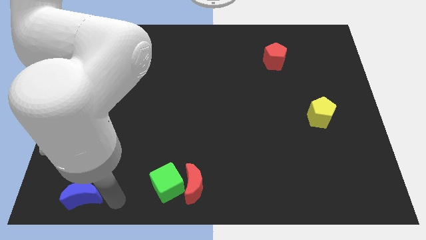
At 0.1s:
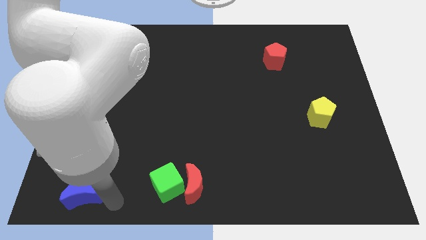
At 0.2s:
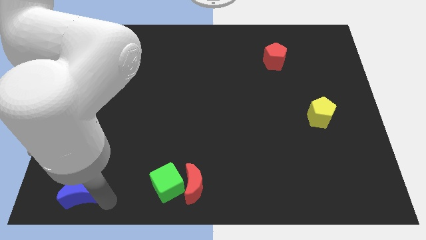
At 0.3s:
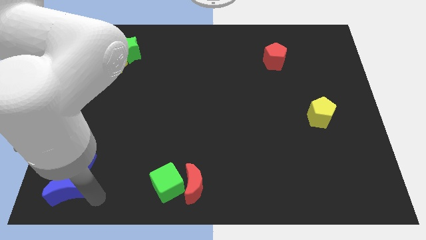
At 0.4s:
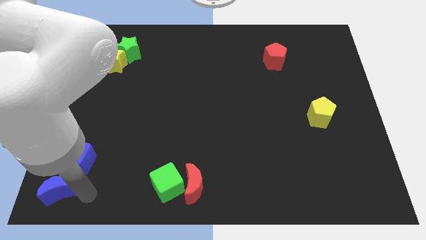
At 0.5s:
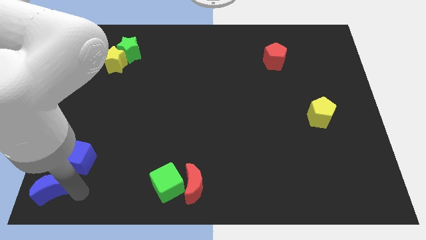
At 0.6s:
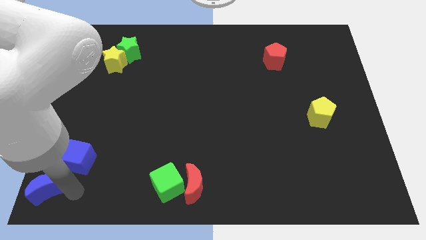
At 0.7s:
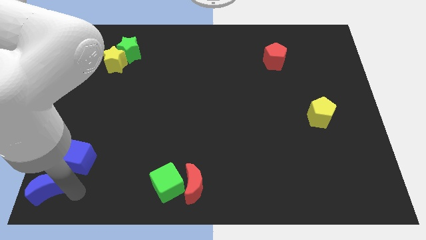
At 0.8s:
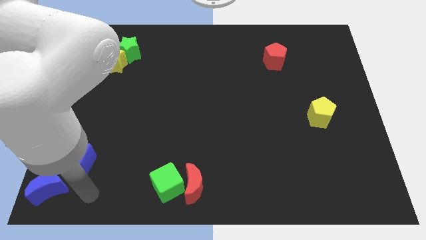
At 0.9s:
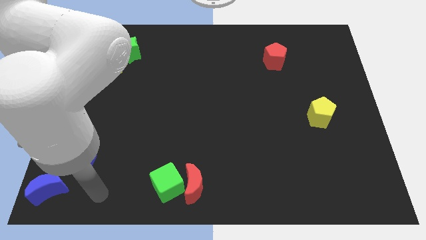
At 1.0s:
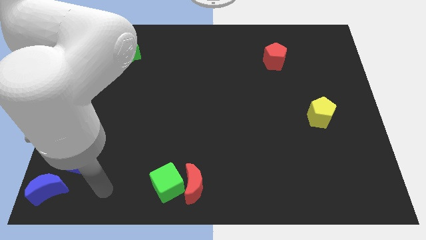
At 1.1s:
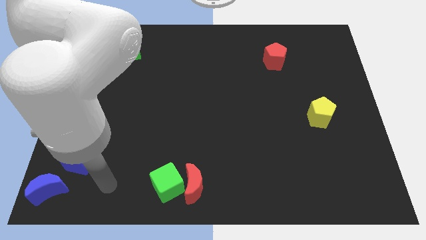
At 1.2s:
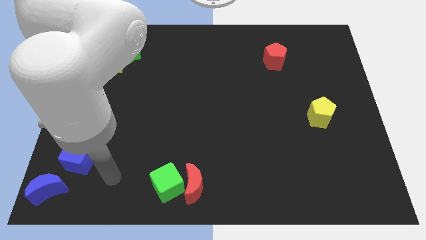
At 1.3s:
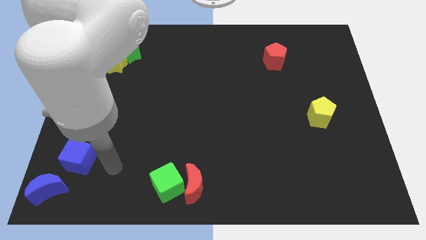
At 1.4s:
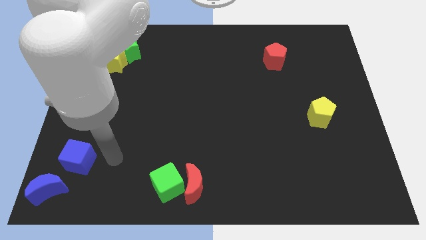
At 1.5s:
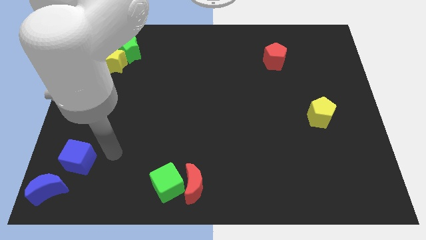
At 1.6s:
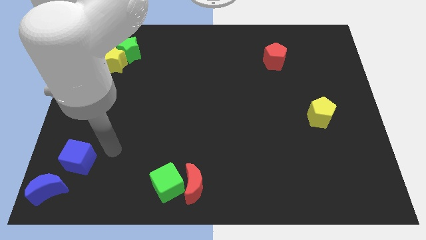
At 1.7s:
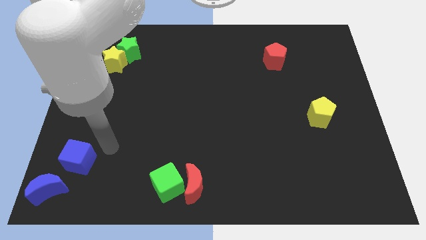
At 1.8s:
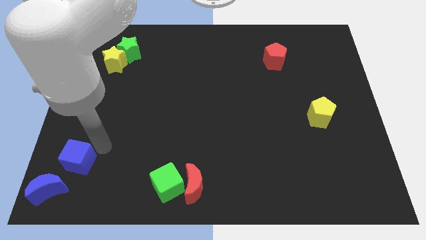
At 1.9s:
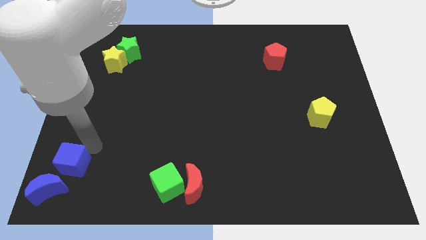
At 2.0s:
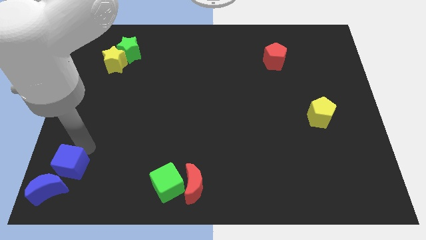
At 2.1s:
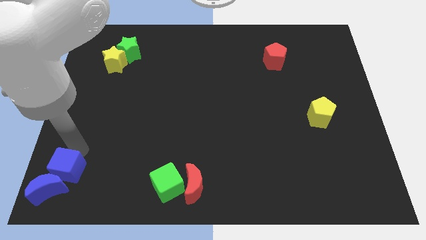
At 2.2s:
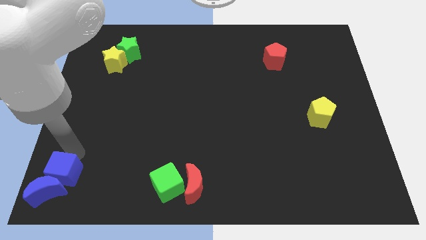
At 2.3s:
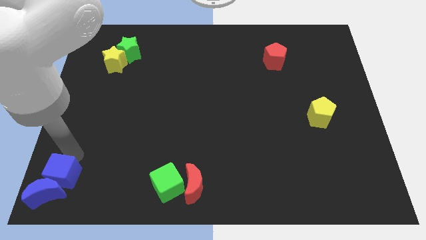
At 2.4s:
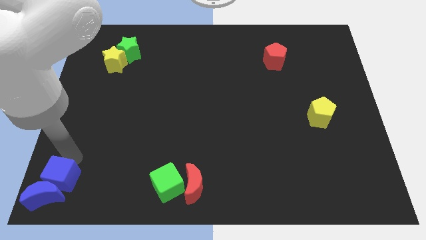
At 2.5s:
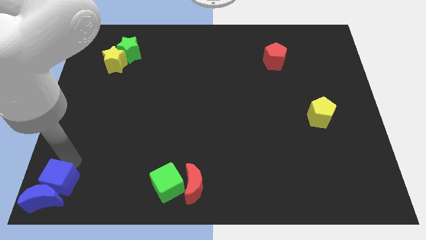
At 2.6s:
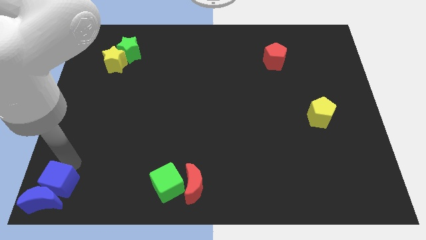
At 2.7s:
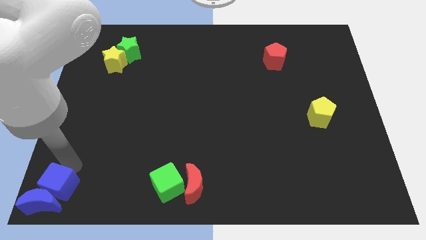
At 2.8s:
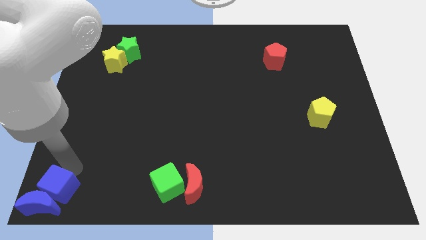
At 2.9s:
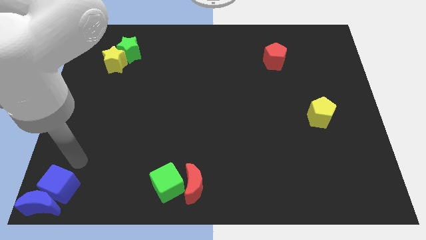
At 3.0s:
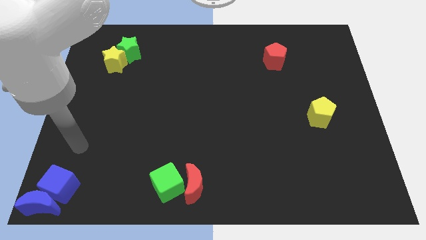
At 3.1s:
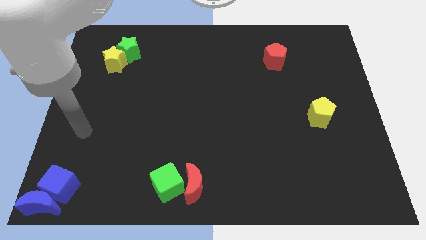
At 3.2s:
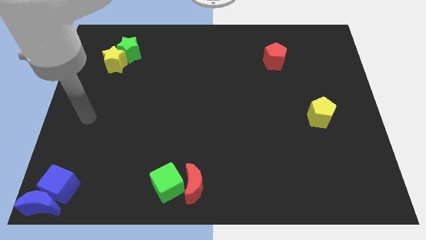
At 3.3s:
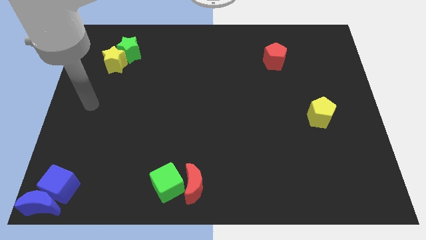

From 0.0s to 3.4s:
move the blue blocks to the bottom left

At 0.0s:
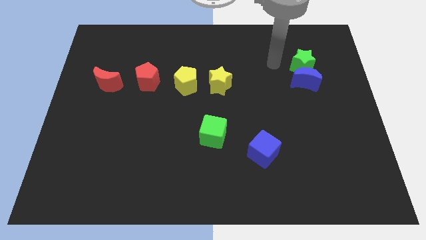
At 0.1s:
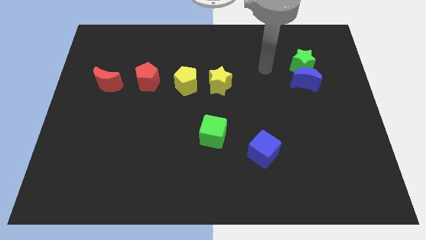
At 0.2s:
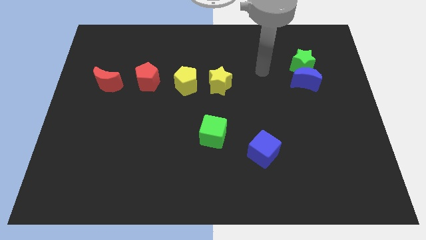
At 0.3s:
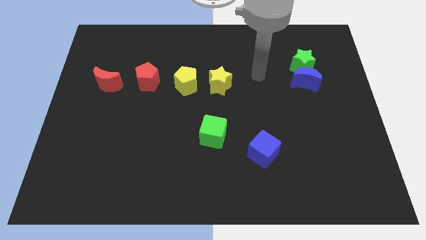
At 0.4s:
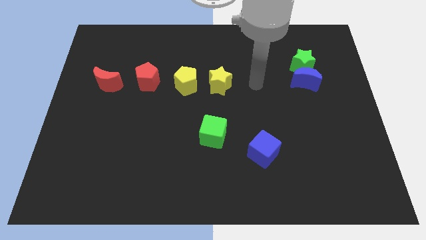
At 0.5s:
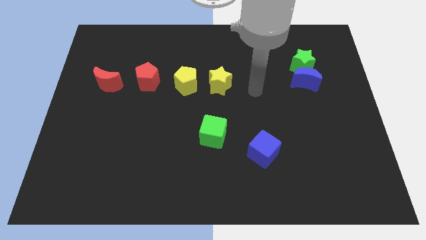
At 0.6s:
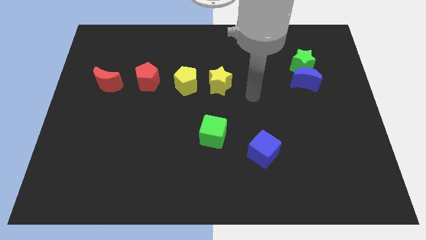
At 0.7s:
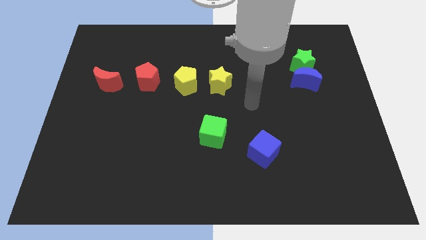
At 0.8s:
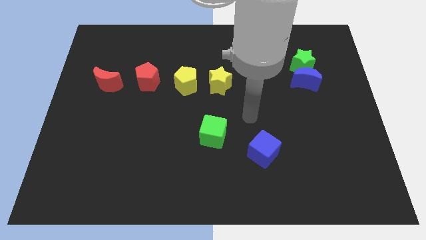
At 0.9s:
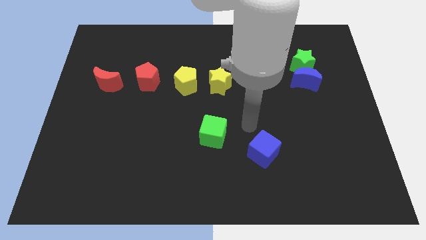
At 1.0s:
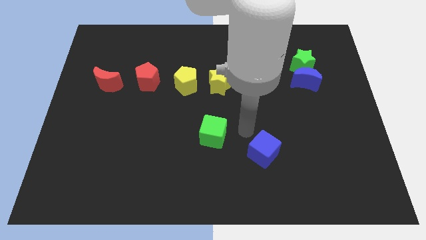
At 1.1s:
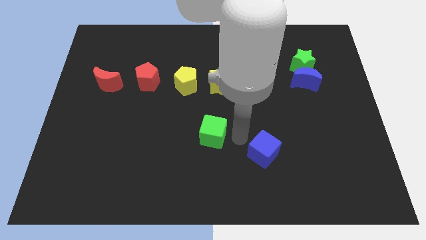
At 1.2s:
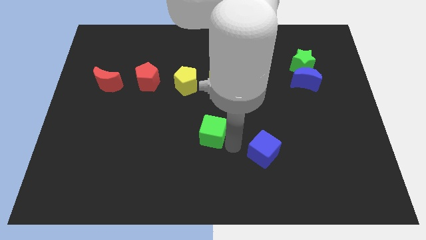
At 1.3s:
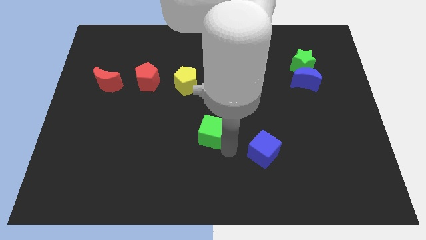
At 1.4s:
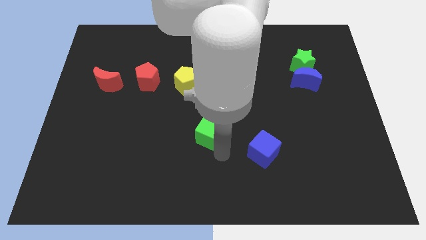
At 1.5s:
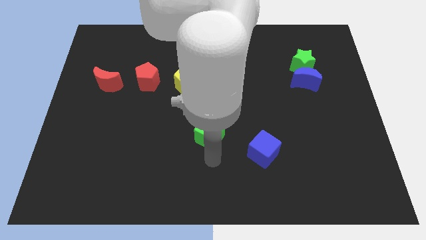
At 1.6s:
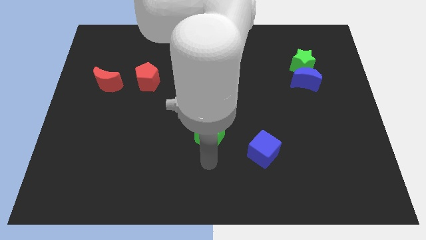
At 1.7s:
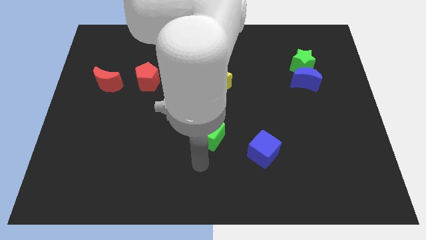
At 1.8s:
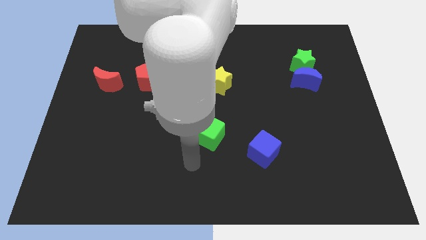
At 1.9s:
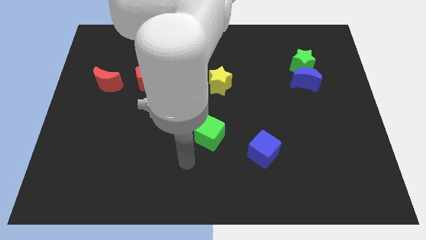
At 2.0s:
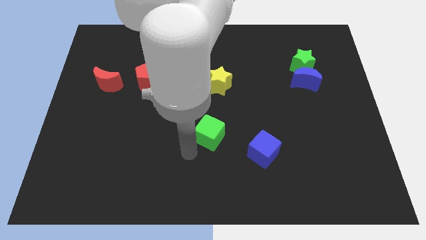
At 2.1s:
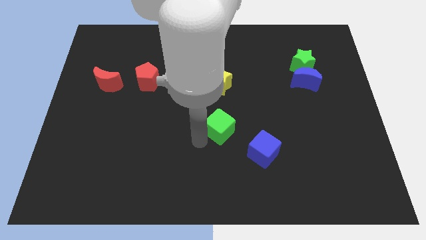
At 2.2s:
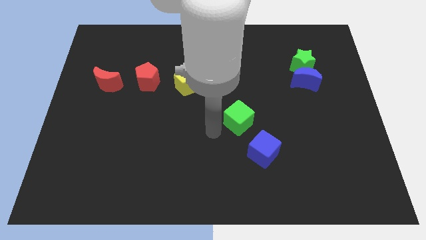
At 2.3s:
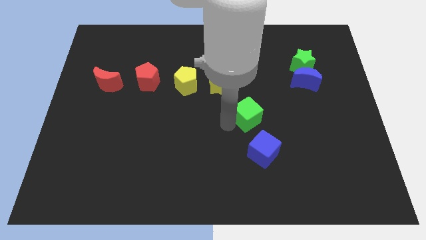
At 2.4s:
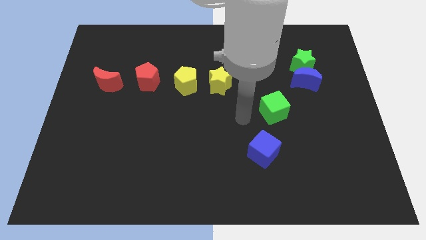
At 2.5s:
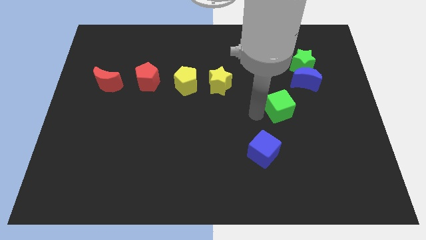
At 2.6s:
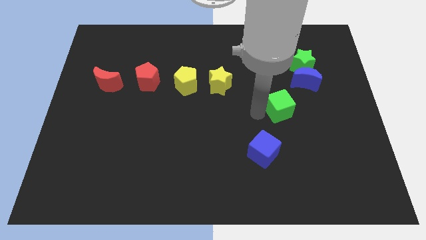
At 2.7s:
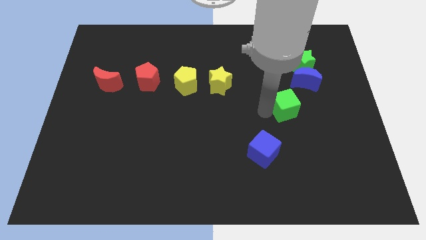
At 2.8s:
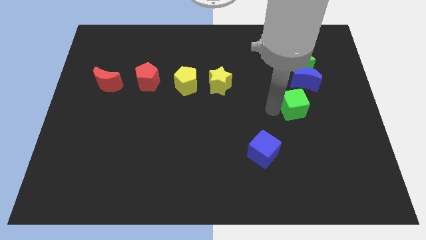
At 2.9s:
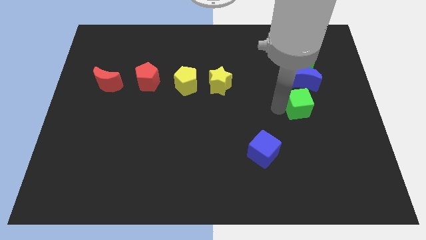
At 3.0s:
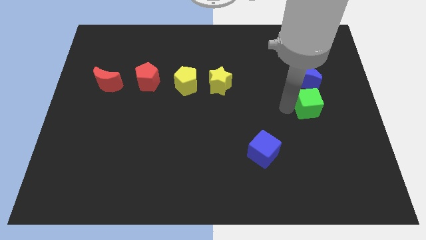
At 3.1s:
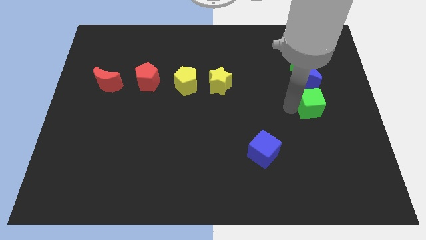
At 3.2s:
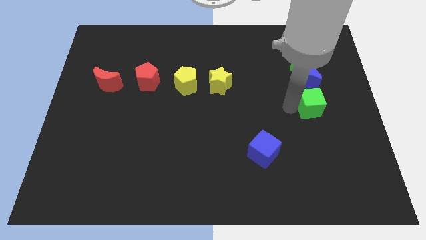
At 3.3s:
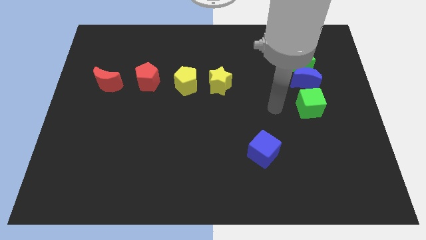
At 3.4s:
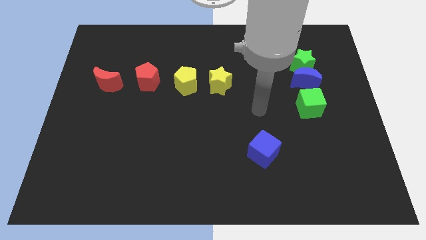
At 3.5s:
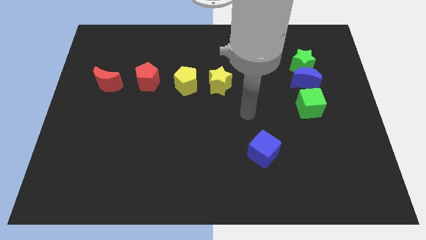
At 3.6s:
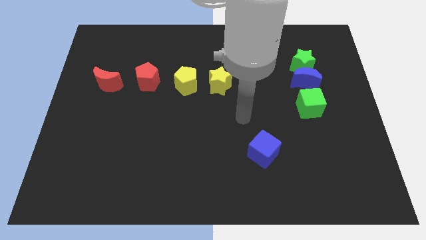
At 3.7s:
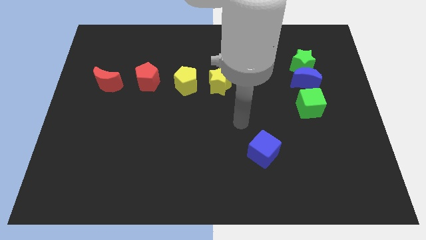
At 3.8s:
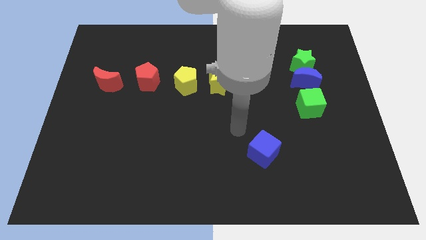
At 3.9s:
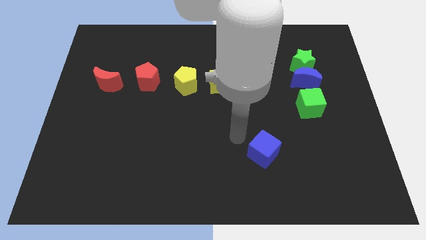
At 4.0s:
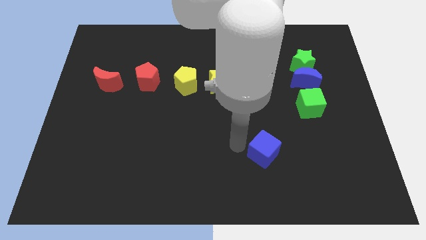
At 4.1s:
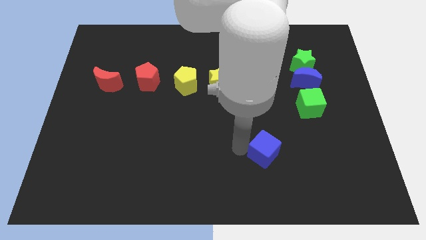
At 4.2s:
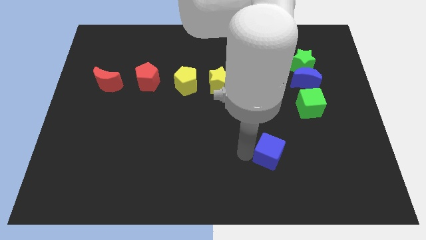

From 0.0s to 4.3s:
move the blue cube to the bottom side of the blue crescent

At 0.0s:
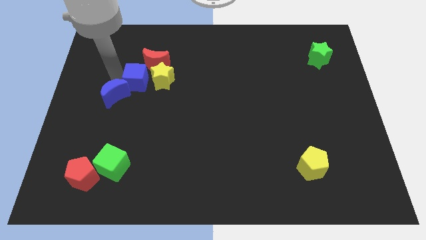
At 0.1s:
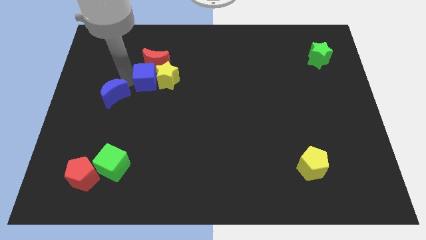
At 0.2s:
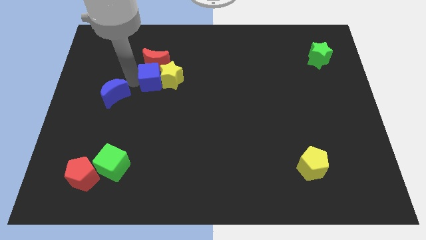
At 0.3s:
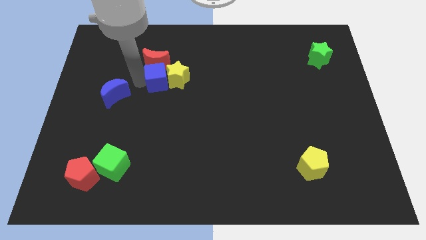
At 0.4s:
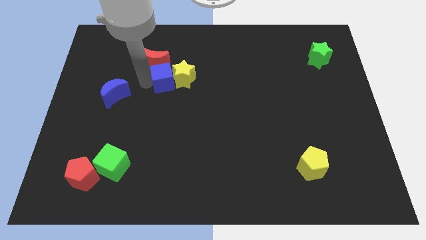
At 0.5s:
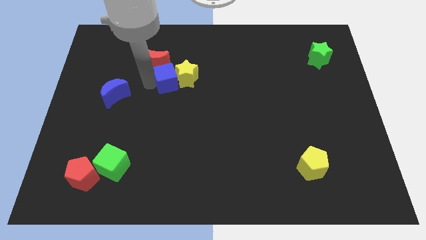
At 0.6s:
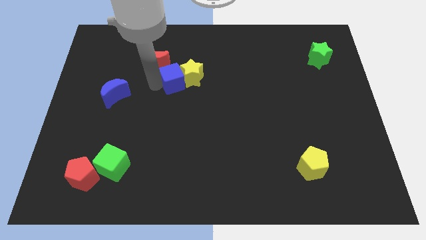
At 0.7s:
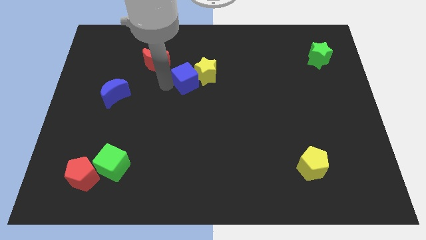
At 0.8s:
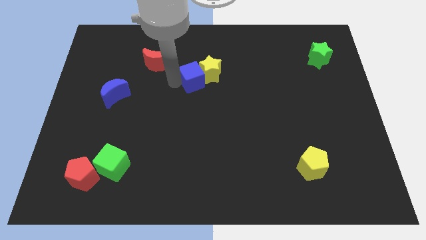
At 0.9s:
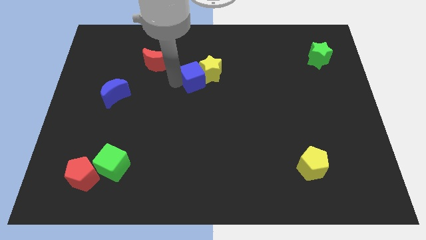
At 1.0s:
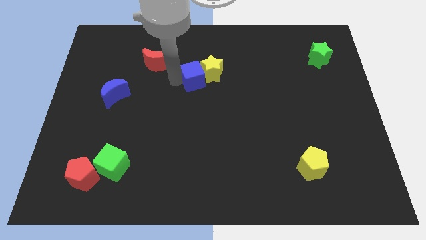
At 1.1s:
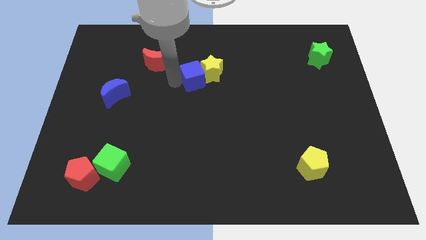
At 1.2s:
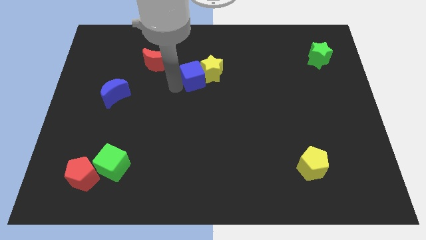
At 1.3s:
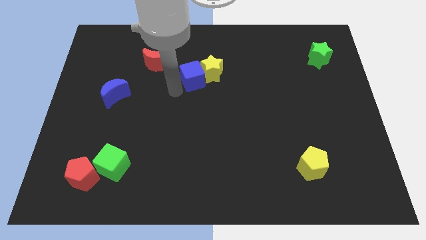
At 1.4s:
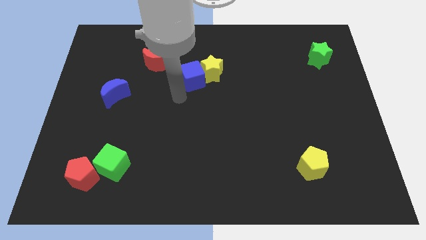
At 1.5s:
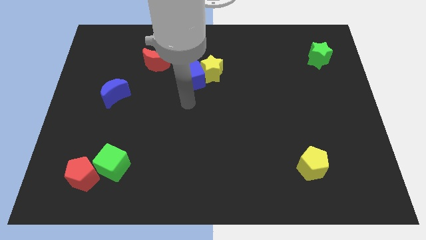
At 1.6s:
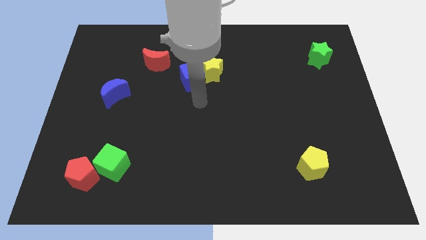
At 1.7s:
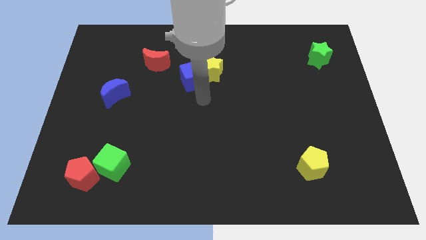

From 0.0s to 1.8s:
push the blue cube into the yellow star
